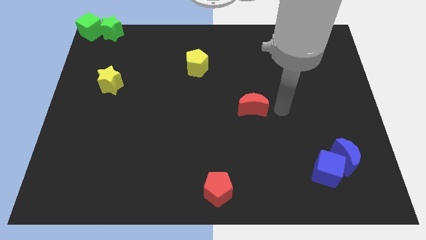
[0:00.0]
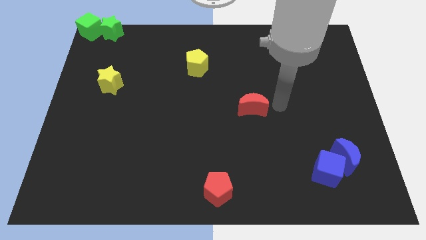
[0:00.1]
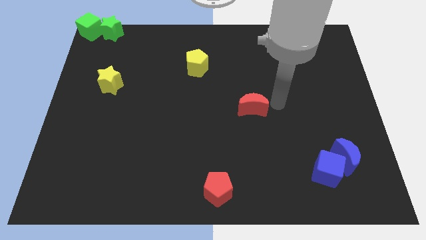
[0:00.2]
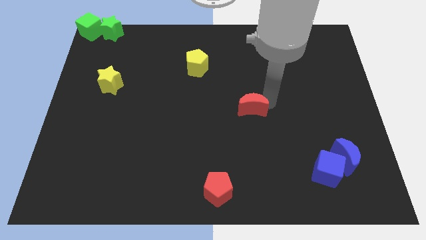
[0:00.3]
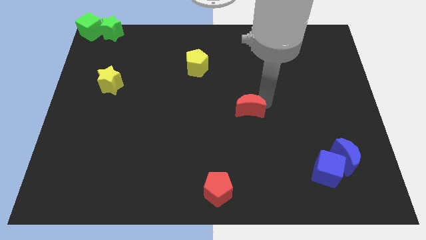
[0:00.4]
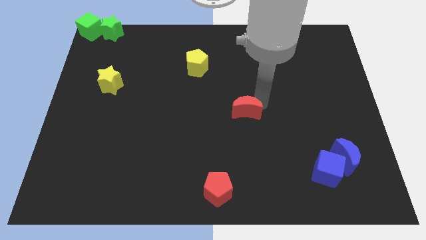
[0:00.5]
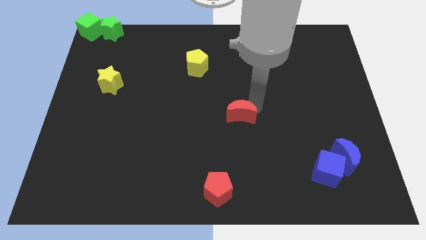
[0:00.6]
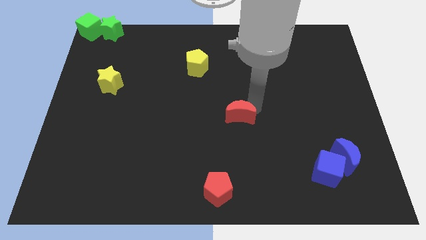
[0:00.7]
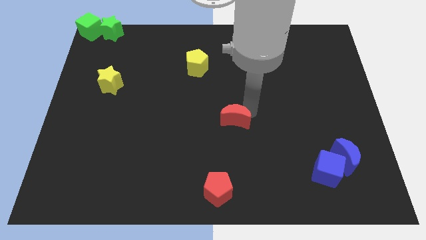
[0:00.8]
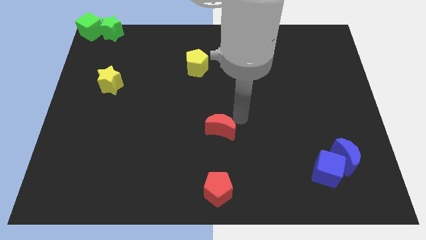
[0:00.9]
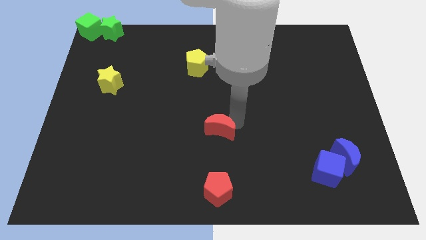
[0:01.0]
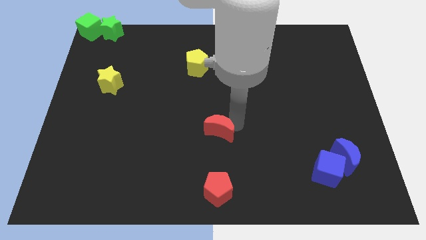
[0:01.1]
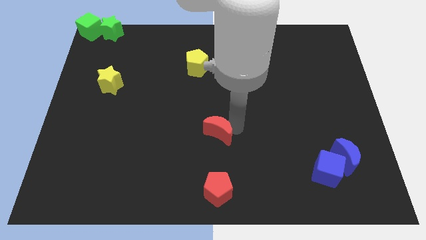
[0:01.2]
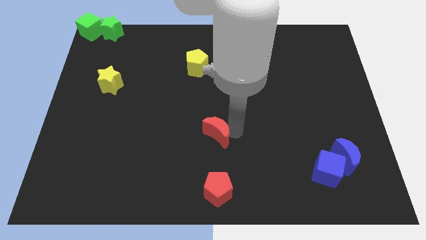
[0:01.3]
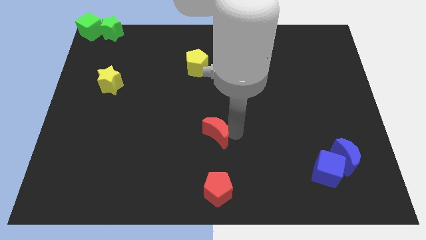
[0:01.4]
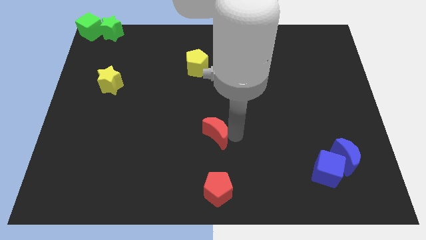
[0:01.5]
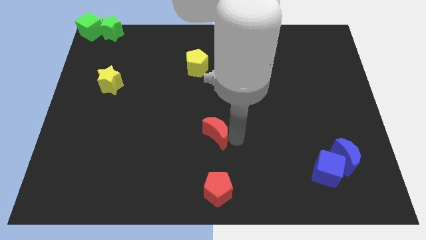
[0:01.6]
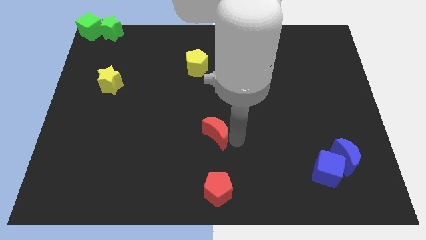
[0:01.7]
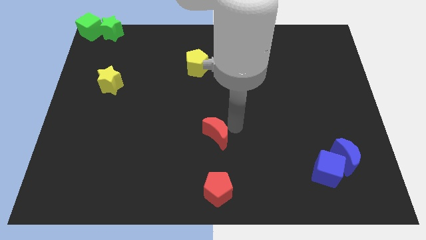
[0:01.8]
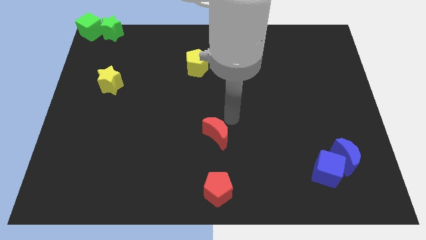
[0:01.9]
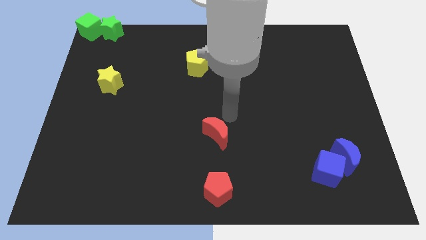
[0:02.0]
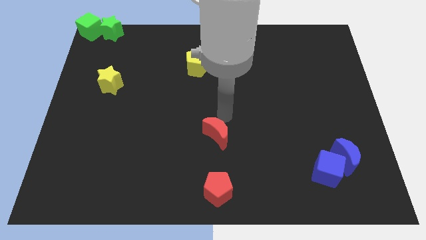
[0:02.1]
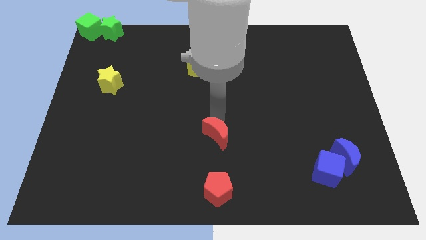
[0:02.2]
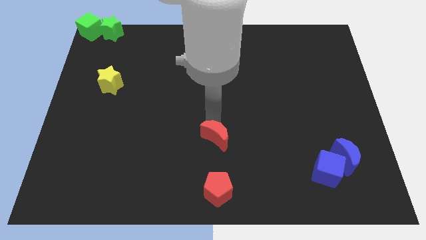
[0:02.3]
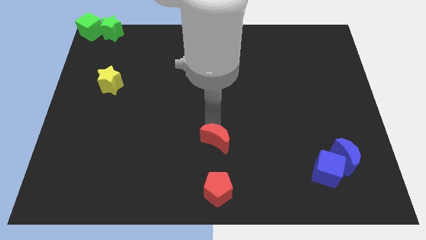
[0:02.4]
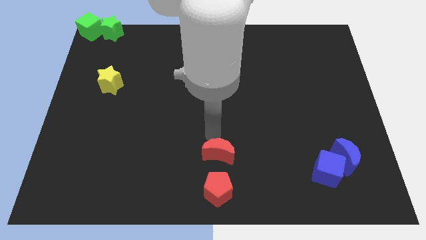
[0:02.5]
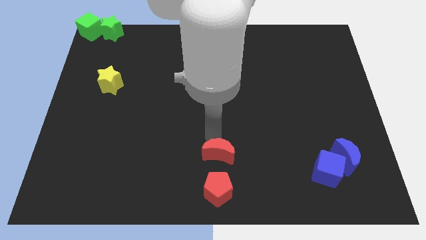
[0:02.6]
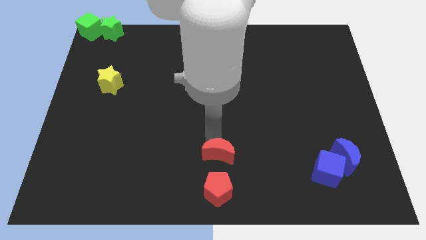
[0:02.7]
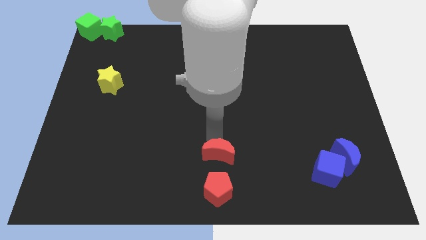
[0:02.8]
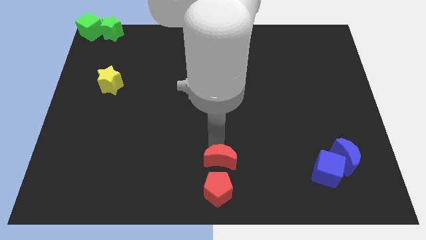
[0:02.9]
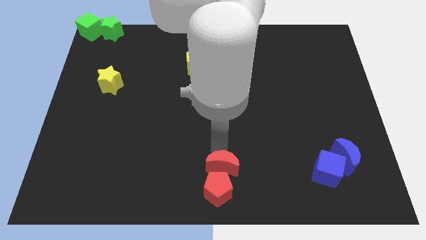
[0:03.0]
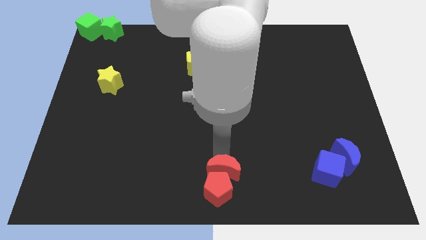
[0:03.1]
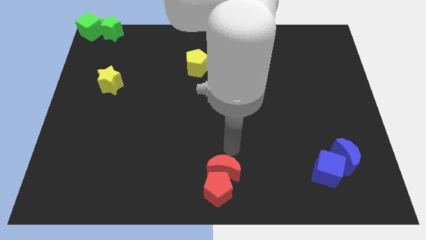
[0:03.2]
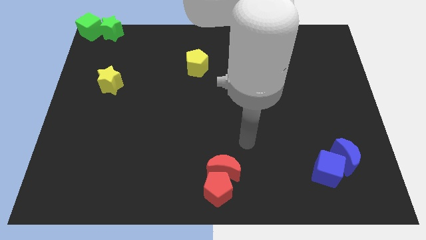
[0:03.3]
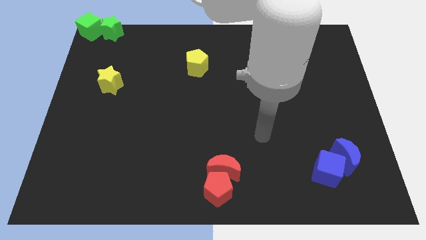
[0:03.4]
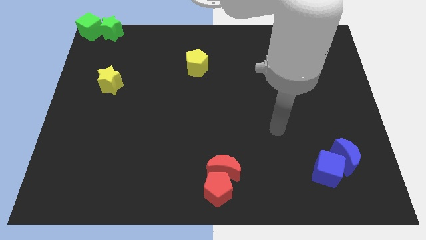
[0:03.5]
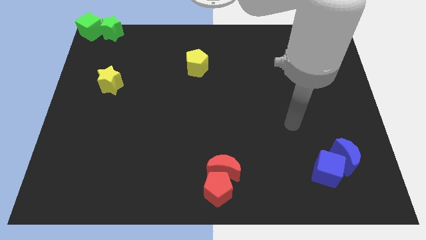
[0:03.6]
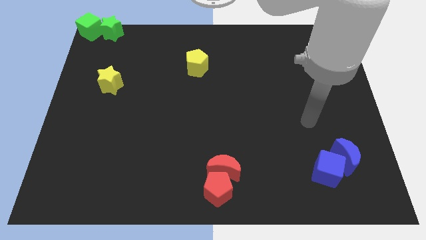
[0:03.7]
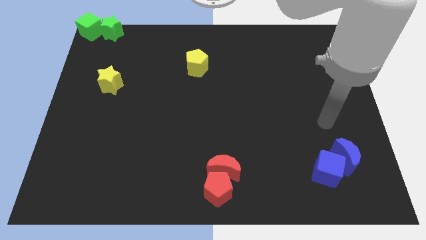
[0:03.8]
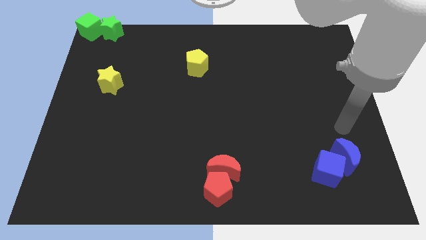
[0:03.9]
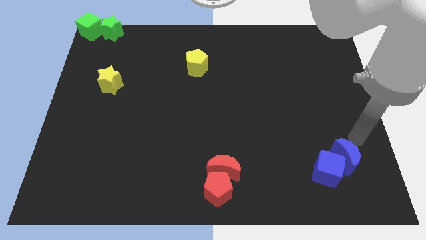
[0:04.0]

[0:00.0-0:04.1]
place the red moon to the top side of the red pentagon

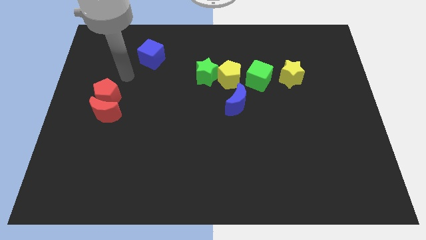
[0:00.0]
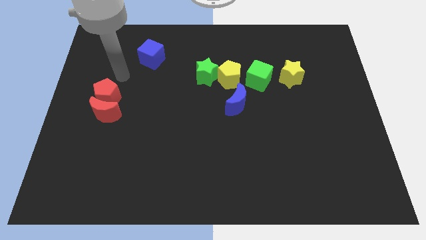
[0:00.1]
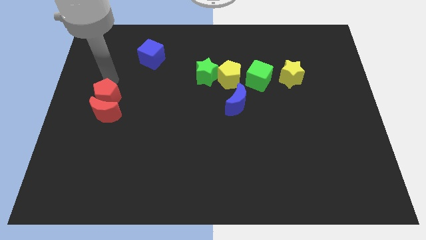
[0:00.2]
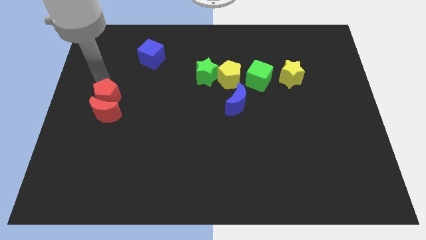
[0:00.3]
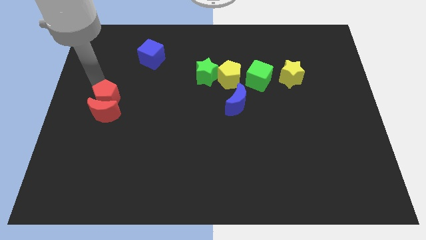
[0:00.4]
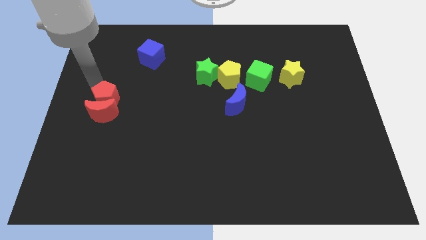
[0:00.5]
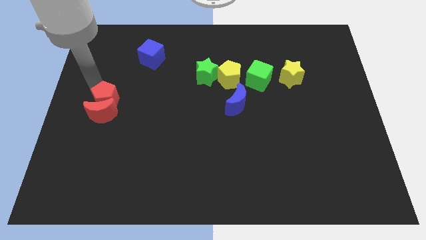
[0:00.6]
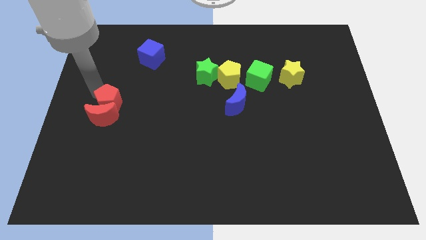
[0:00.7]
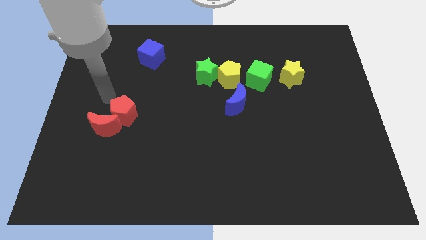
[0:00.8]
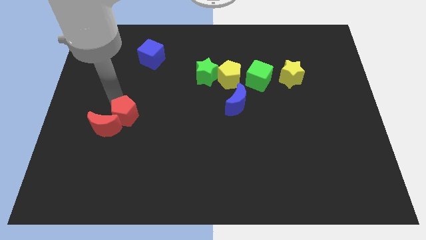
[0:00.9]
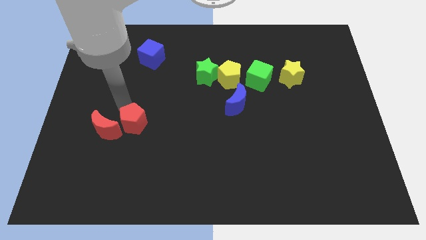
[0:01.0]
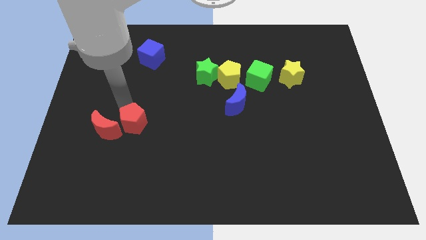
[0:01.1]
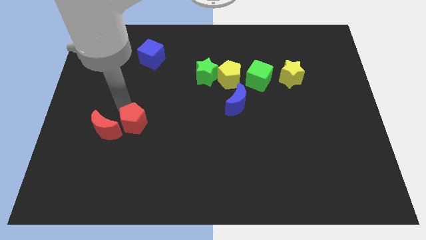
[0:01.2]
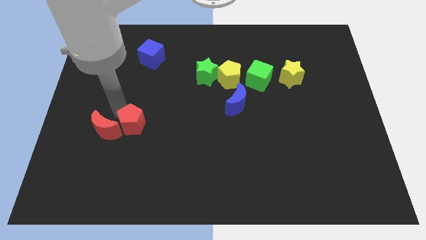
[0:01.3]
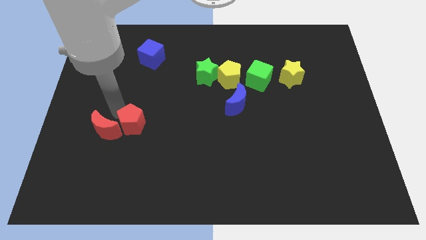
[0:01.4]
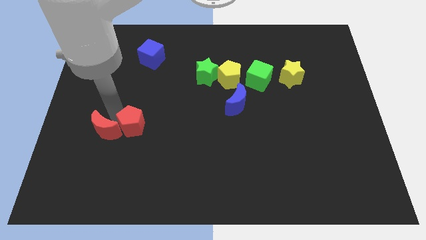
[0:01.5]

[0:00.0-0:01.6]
slightly push the red pentagon and red moon to the bottom side

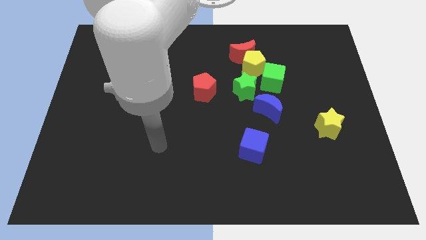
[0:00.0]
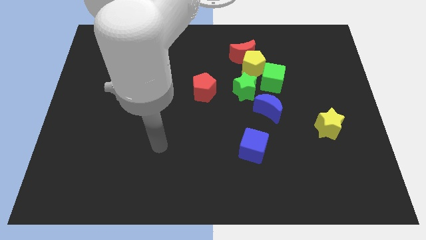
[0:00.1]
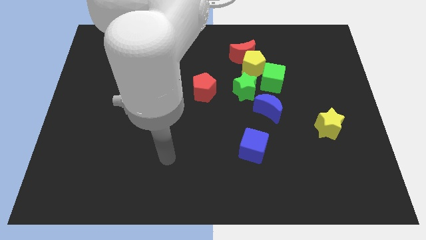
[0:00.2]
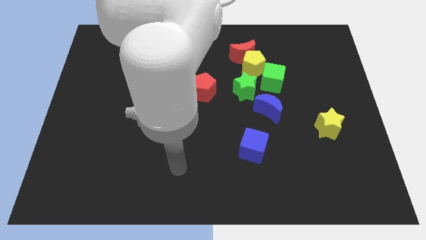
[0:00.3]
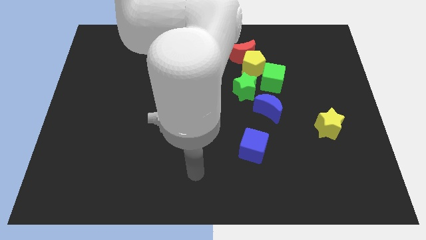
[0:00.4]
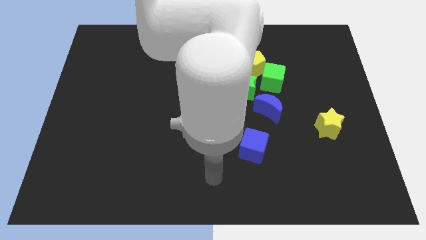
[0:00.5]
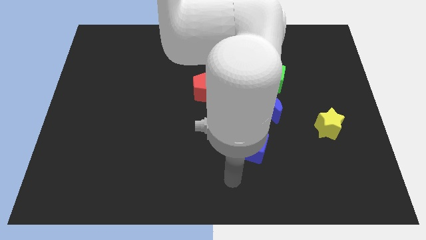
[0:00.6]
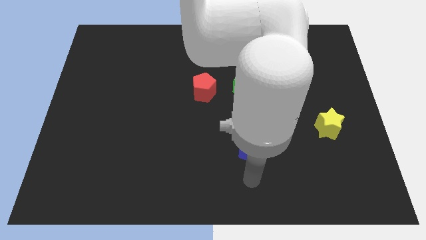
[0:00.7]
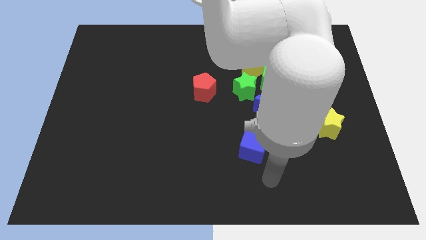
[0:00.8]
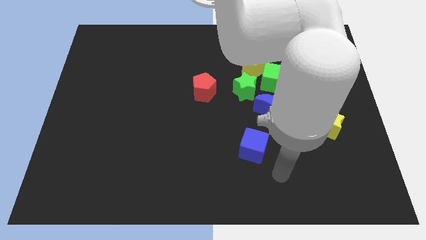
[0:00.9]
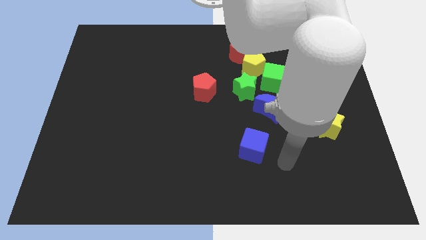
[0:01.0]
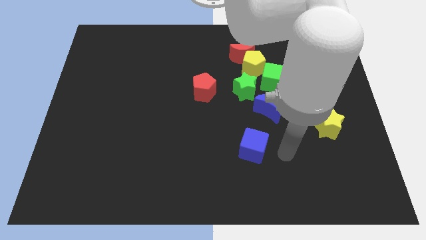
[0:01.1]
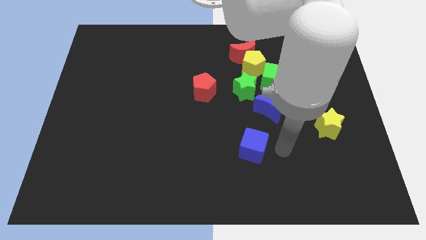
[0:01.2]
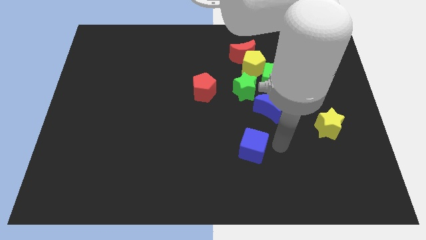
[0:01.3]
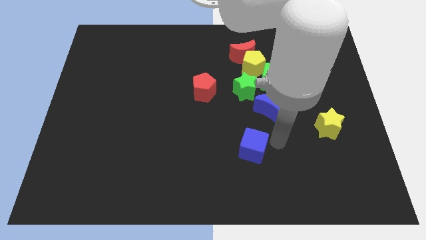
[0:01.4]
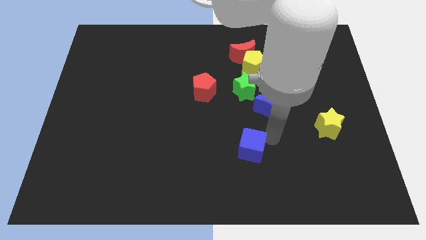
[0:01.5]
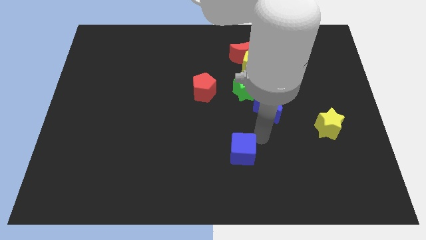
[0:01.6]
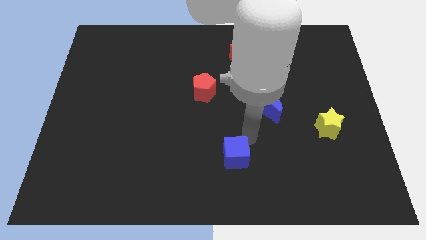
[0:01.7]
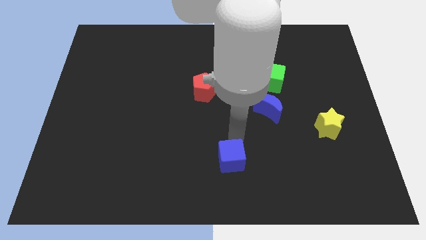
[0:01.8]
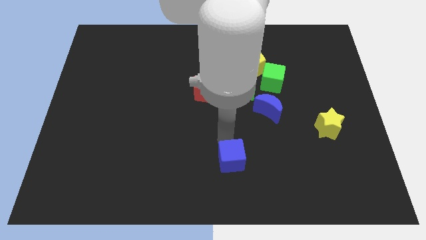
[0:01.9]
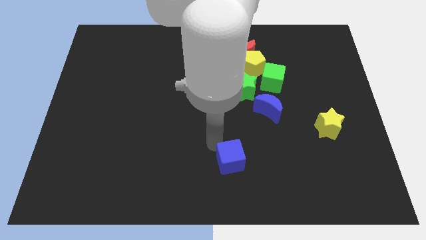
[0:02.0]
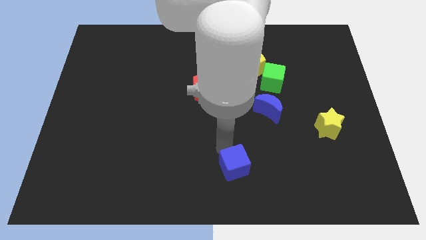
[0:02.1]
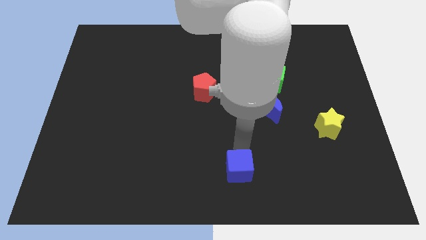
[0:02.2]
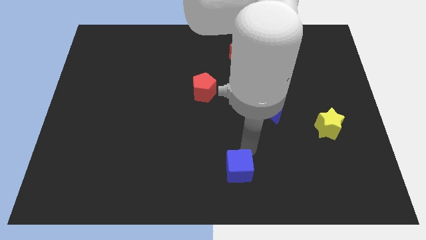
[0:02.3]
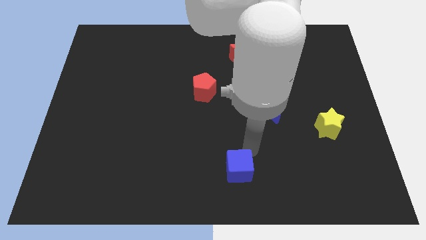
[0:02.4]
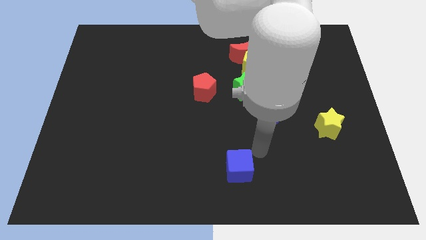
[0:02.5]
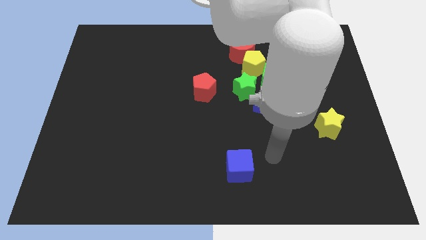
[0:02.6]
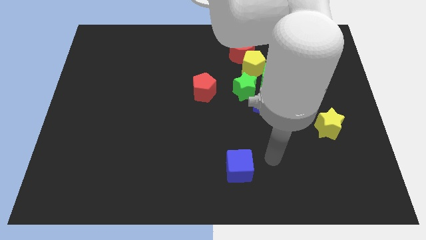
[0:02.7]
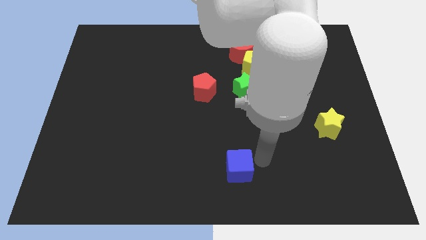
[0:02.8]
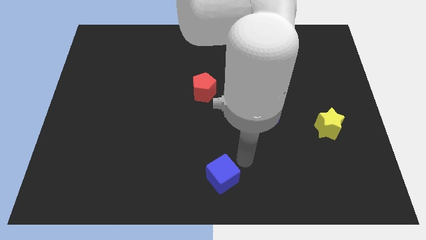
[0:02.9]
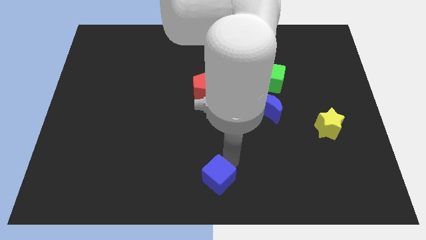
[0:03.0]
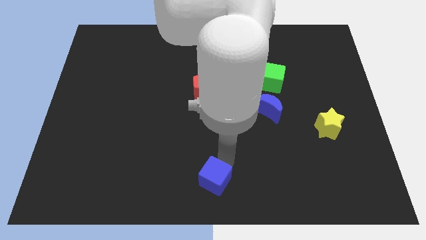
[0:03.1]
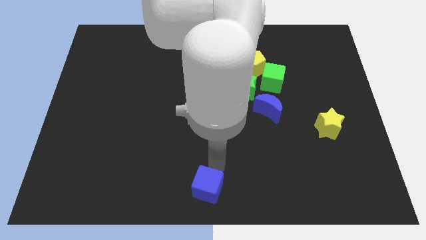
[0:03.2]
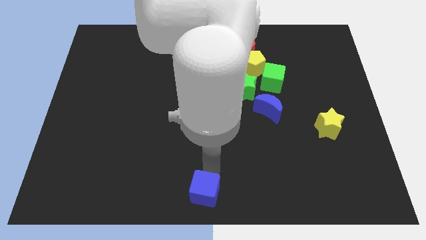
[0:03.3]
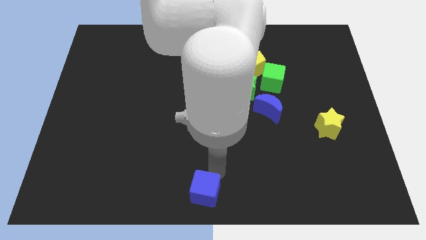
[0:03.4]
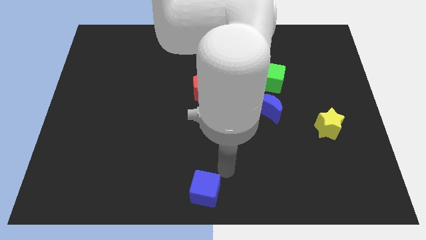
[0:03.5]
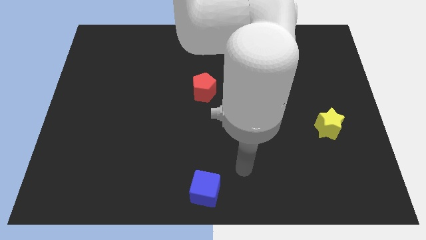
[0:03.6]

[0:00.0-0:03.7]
place the blue cube at the bottom center
